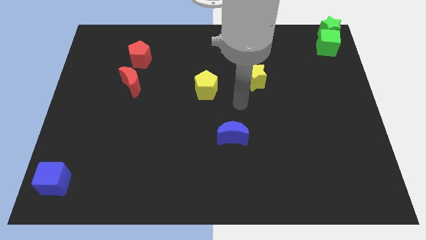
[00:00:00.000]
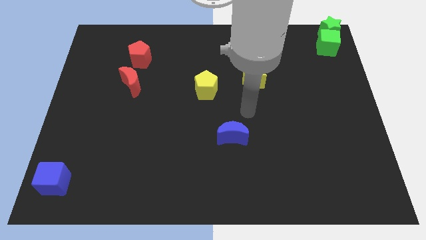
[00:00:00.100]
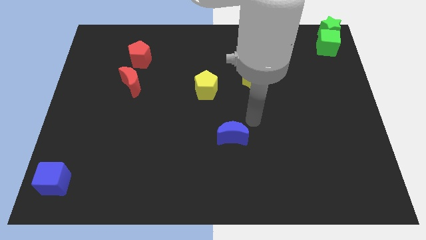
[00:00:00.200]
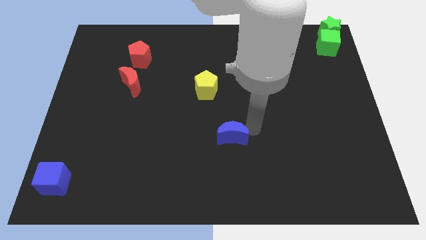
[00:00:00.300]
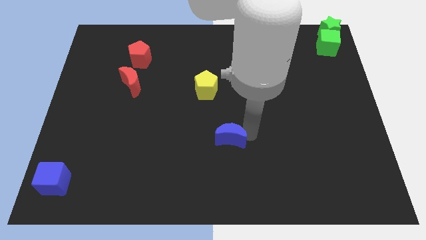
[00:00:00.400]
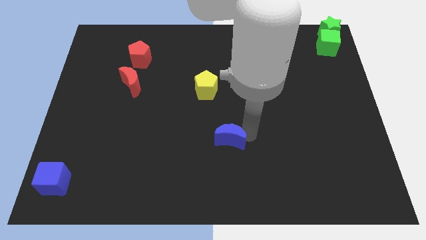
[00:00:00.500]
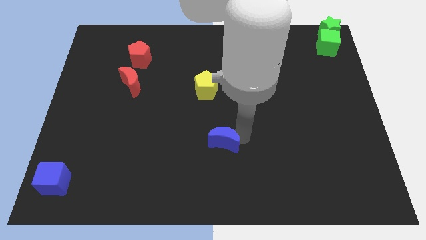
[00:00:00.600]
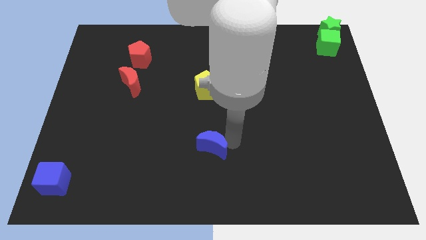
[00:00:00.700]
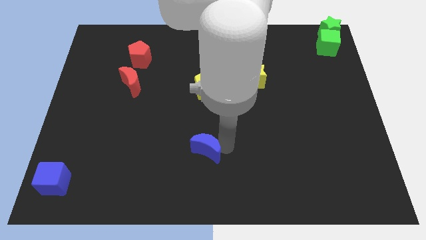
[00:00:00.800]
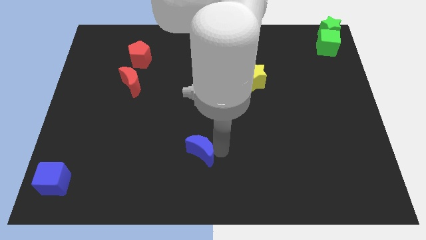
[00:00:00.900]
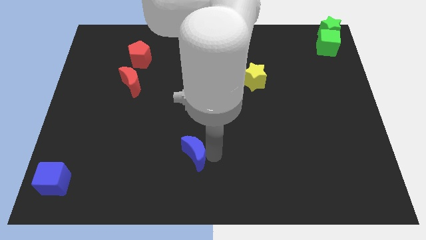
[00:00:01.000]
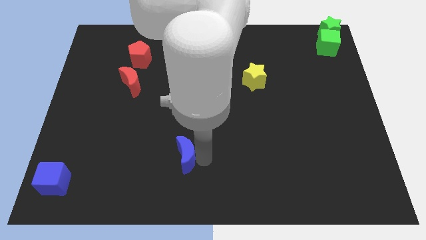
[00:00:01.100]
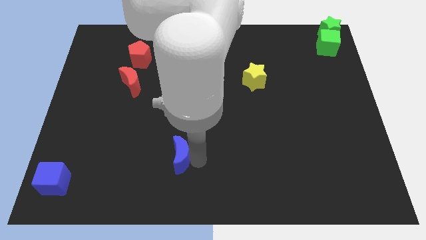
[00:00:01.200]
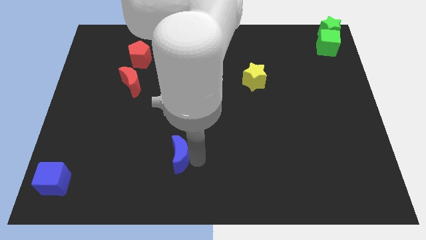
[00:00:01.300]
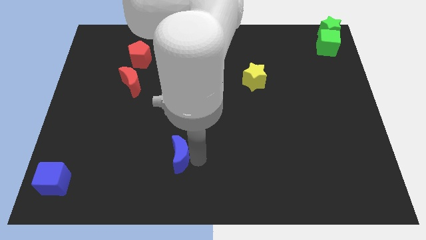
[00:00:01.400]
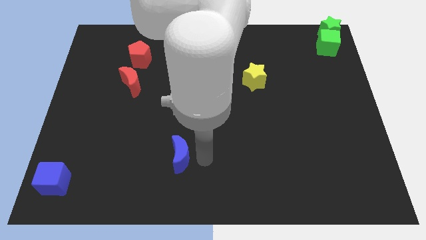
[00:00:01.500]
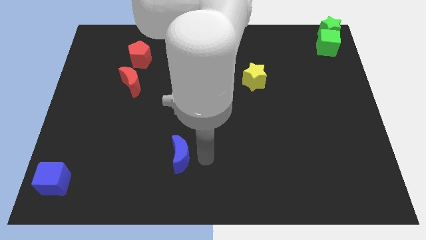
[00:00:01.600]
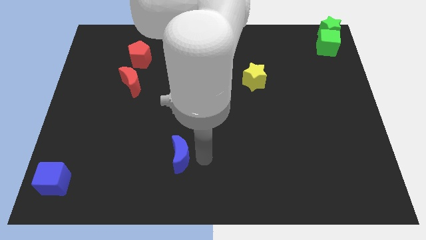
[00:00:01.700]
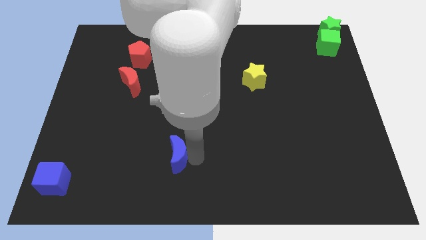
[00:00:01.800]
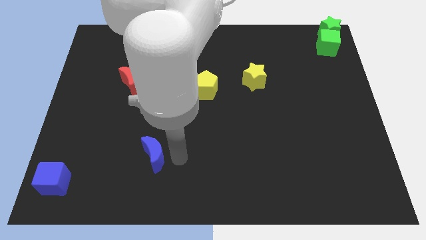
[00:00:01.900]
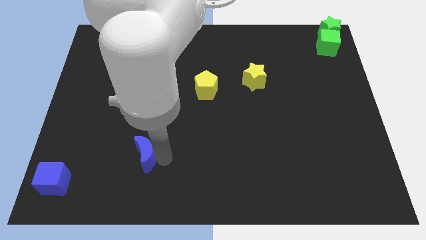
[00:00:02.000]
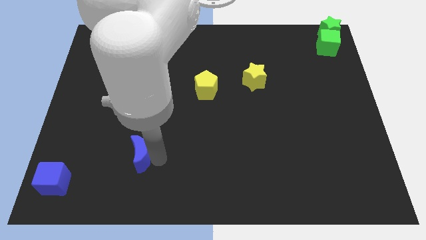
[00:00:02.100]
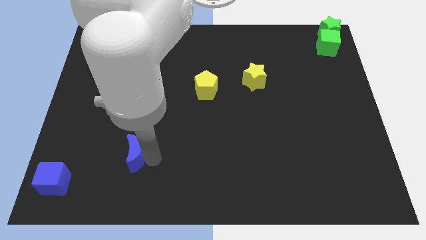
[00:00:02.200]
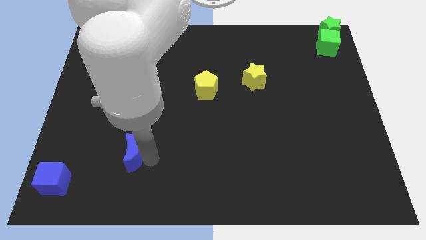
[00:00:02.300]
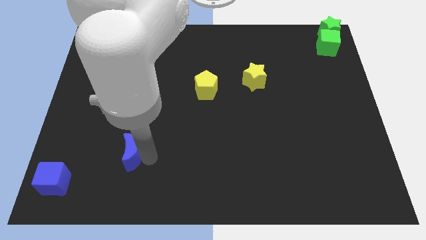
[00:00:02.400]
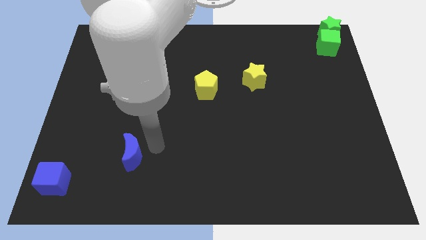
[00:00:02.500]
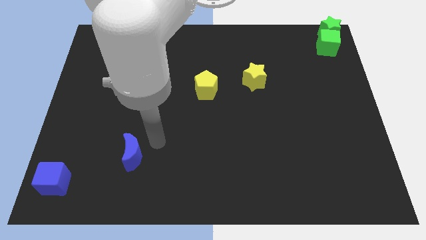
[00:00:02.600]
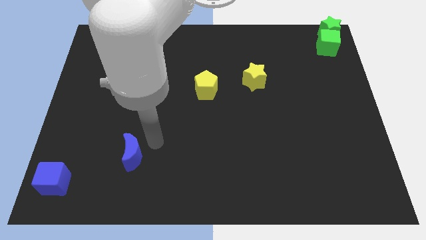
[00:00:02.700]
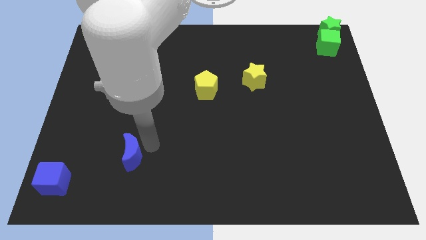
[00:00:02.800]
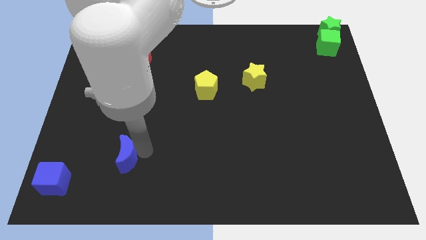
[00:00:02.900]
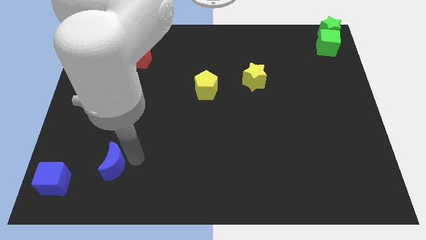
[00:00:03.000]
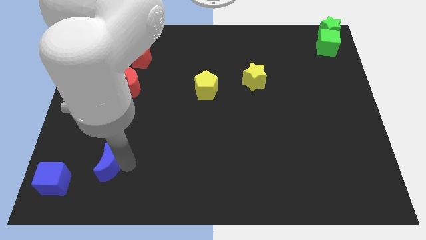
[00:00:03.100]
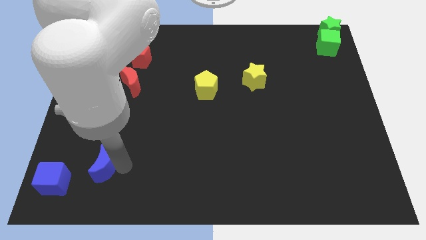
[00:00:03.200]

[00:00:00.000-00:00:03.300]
push the blue moon towards the blue cube

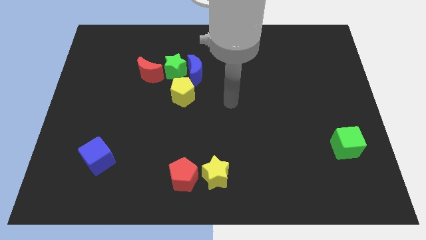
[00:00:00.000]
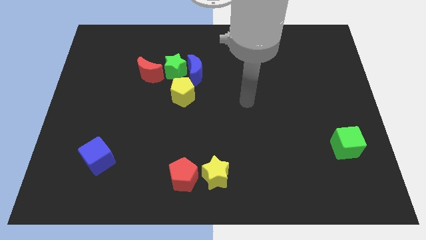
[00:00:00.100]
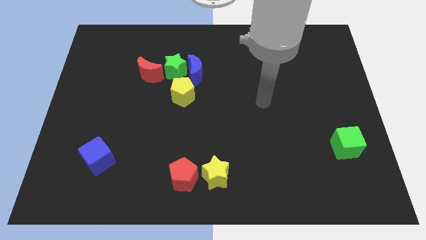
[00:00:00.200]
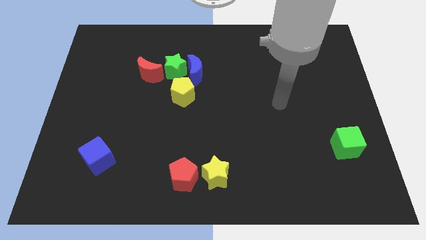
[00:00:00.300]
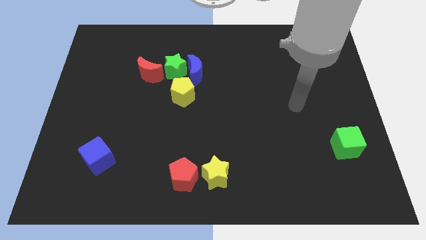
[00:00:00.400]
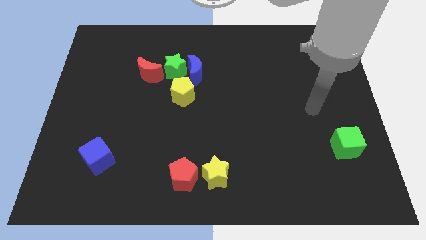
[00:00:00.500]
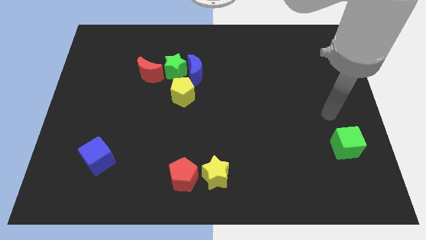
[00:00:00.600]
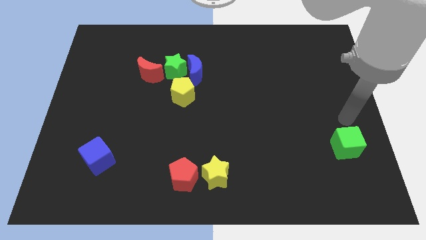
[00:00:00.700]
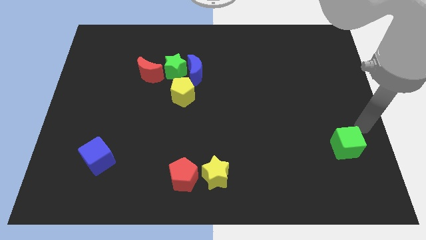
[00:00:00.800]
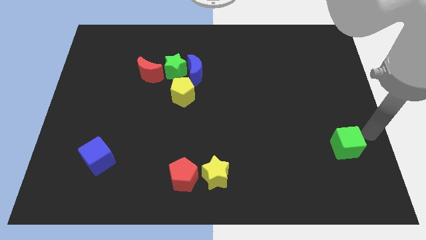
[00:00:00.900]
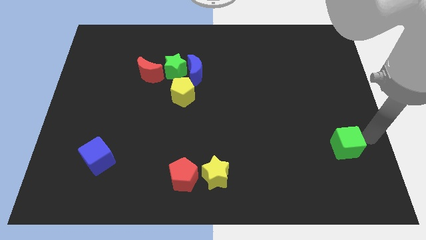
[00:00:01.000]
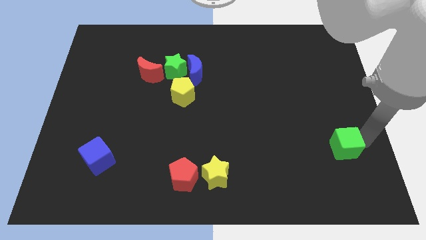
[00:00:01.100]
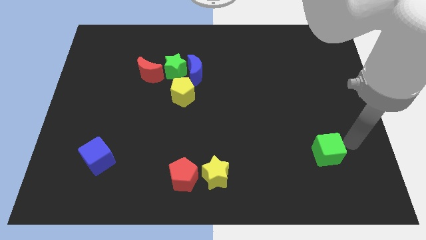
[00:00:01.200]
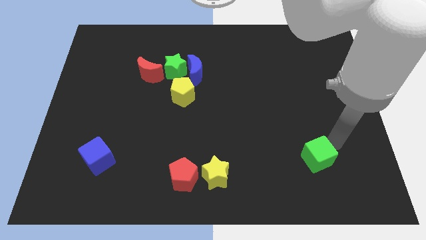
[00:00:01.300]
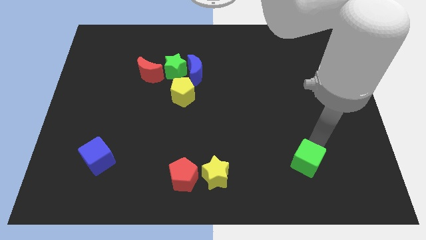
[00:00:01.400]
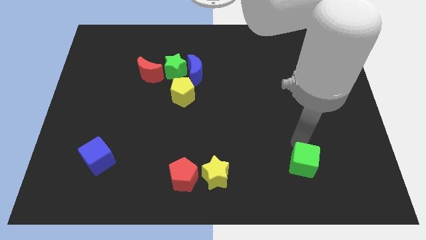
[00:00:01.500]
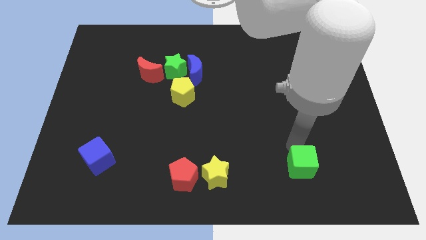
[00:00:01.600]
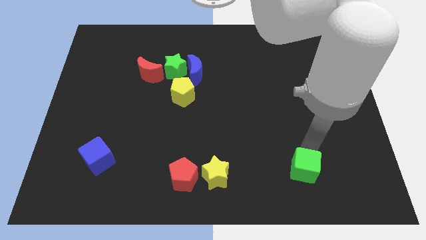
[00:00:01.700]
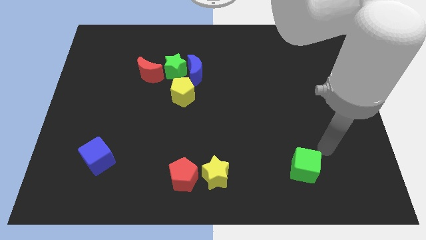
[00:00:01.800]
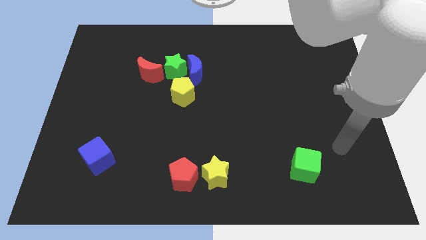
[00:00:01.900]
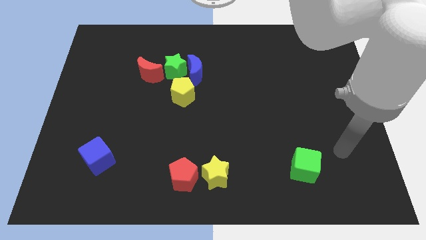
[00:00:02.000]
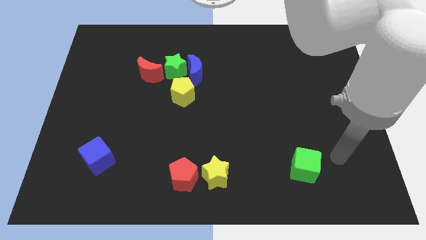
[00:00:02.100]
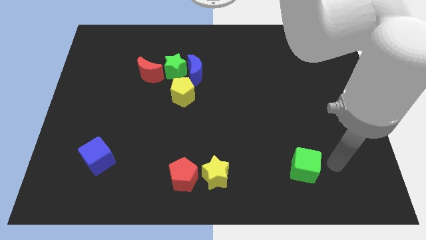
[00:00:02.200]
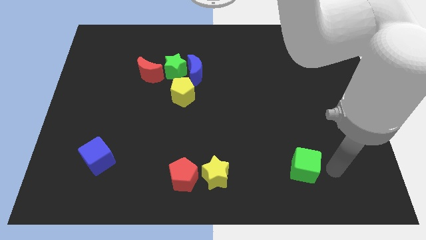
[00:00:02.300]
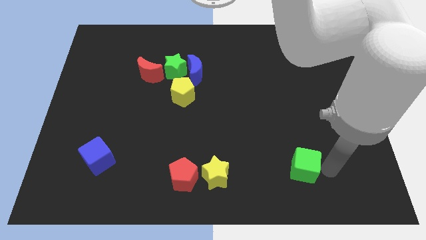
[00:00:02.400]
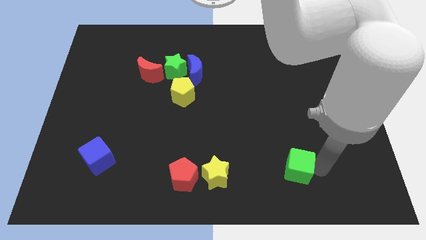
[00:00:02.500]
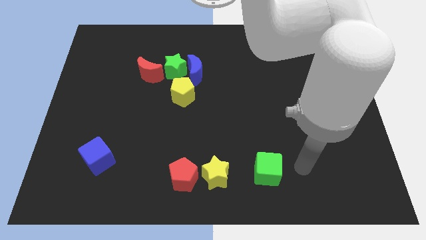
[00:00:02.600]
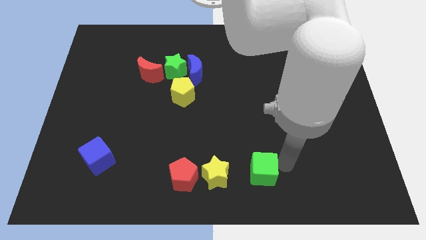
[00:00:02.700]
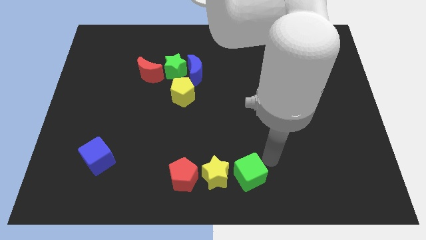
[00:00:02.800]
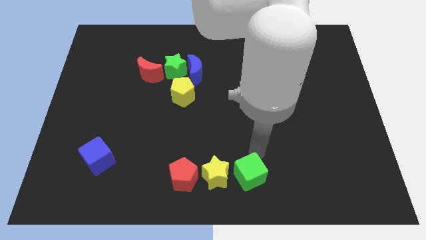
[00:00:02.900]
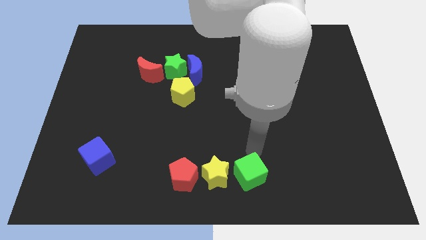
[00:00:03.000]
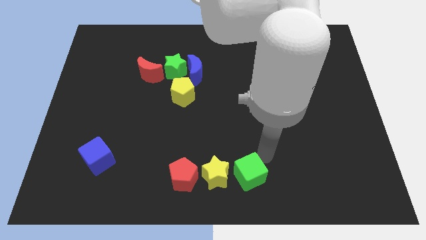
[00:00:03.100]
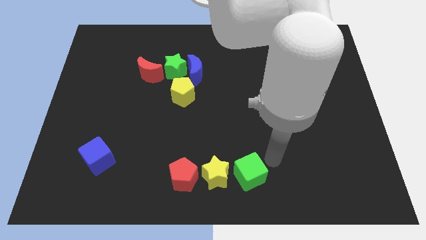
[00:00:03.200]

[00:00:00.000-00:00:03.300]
move the green cube near to the yellow star

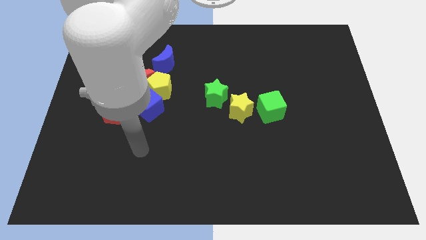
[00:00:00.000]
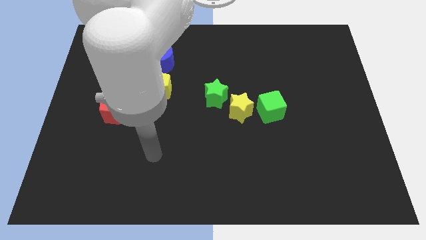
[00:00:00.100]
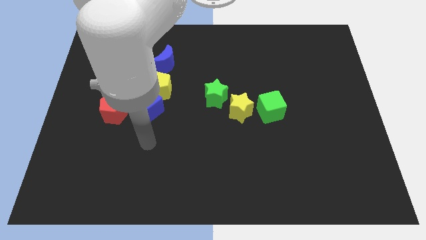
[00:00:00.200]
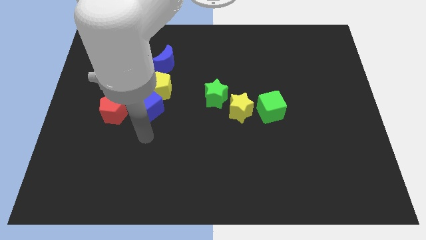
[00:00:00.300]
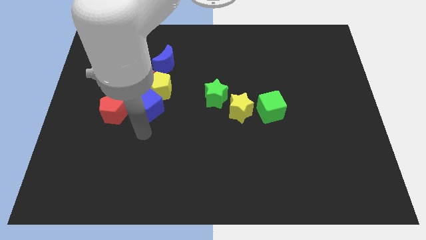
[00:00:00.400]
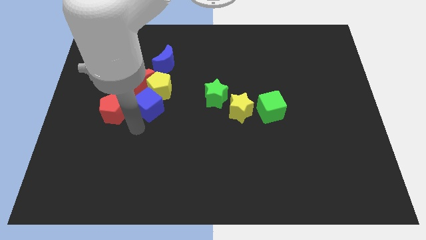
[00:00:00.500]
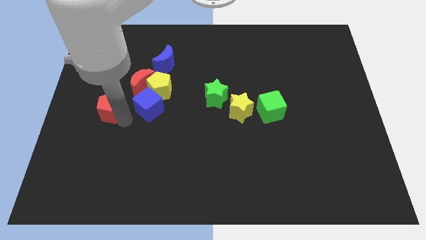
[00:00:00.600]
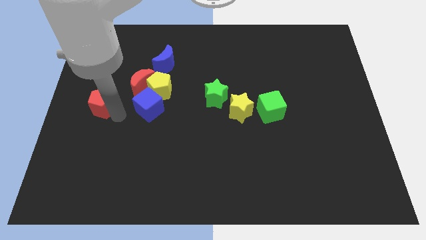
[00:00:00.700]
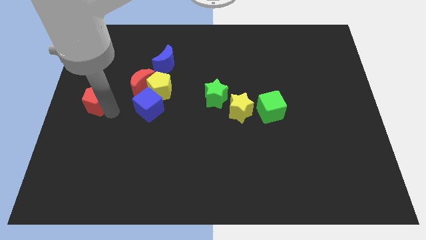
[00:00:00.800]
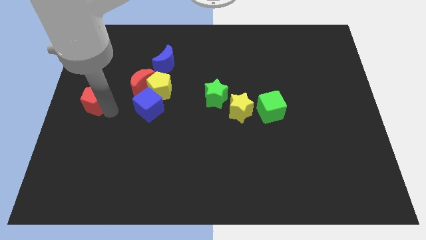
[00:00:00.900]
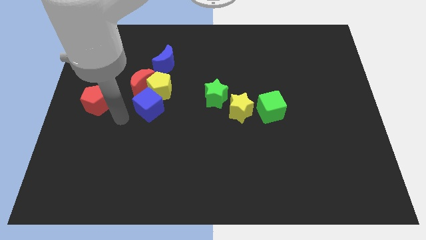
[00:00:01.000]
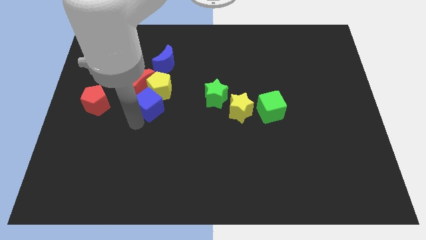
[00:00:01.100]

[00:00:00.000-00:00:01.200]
move red pentagon towards center left

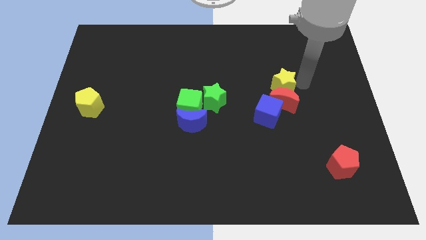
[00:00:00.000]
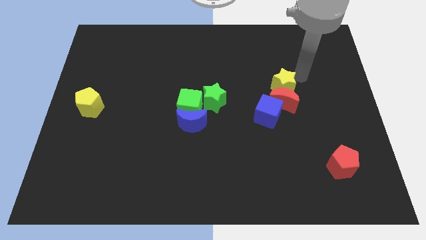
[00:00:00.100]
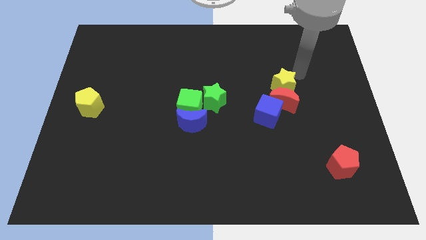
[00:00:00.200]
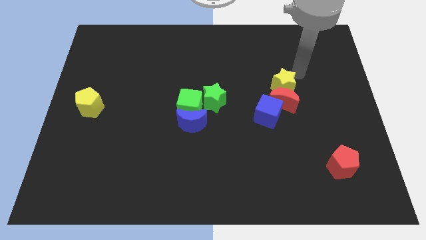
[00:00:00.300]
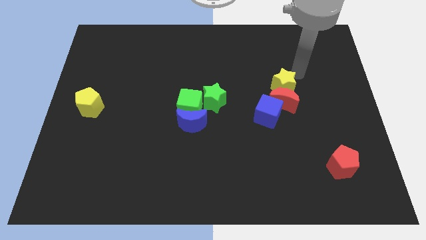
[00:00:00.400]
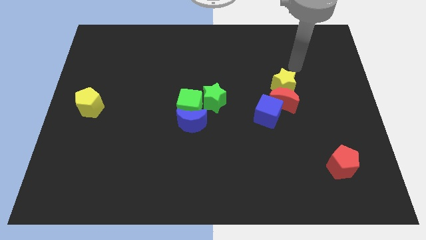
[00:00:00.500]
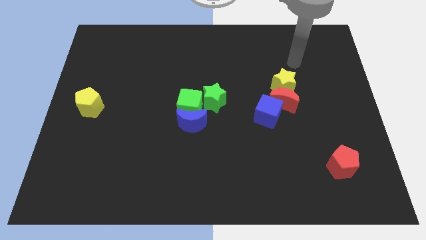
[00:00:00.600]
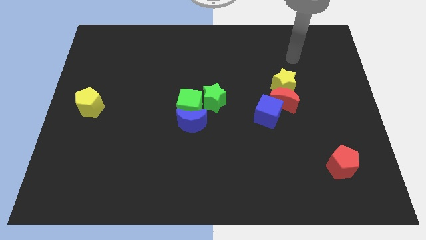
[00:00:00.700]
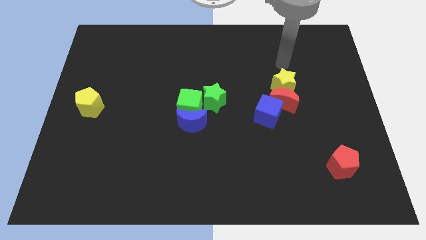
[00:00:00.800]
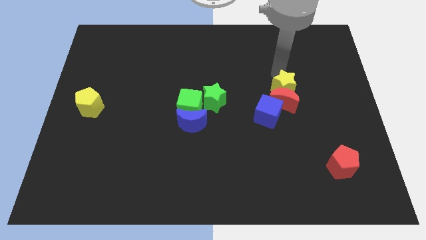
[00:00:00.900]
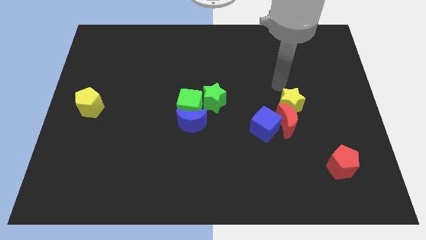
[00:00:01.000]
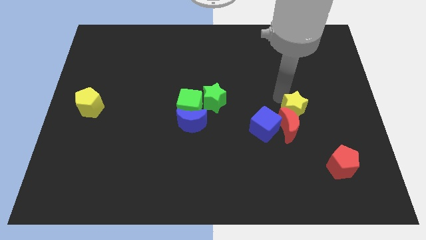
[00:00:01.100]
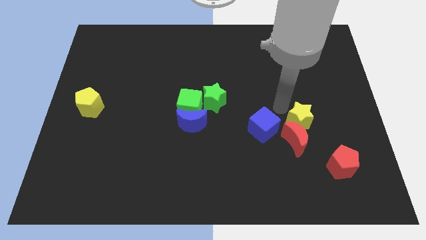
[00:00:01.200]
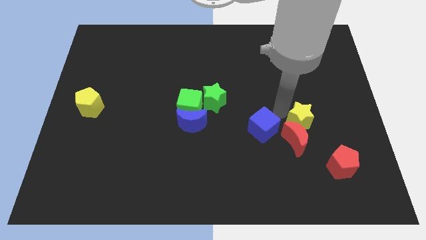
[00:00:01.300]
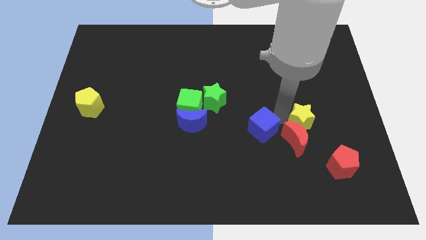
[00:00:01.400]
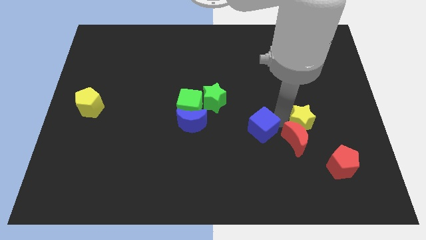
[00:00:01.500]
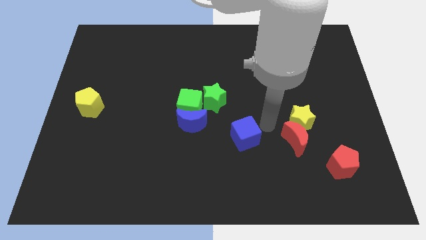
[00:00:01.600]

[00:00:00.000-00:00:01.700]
push yellow star diagonally towards red pentagon
